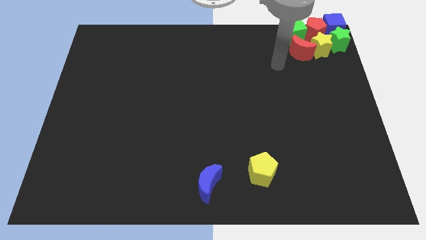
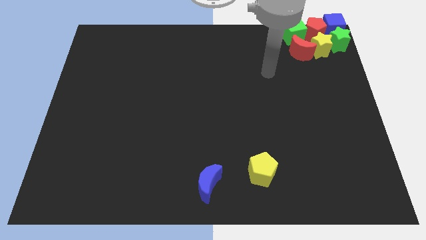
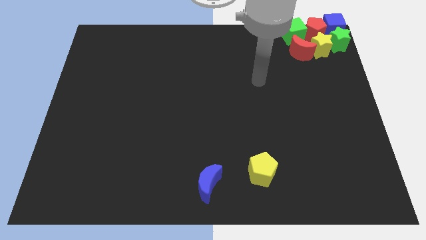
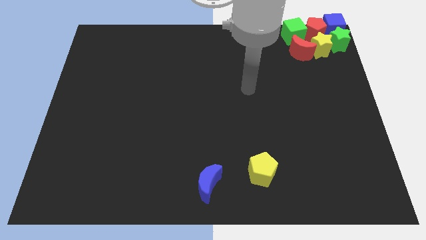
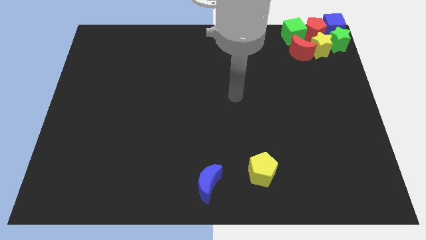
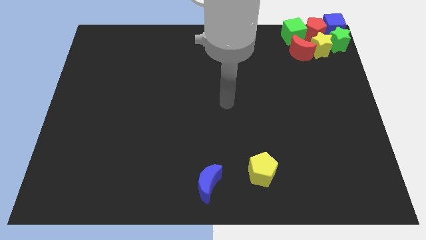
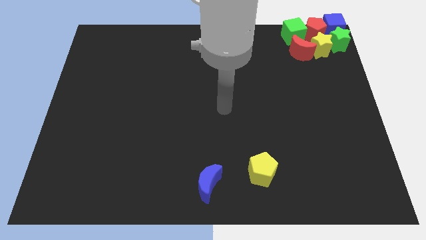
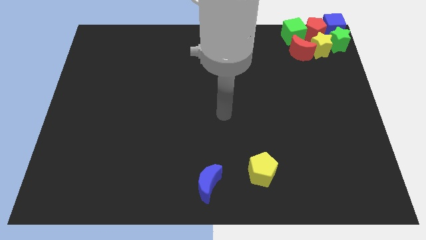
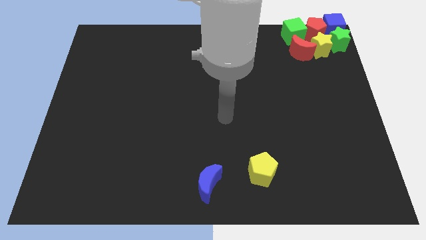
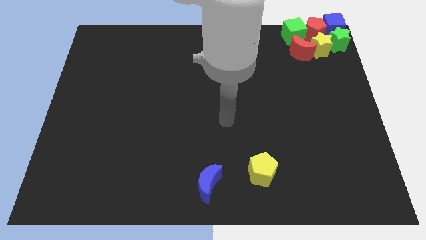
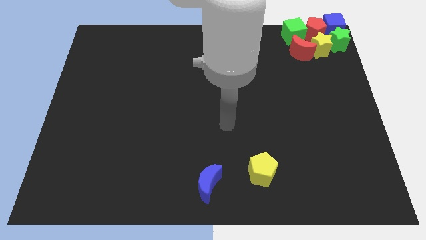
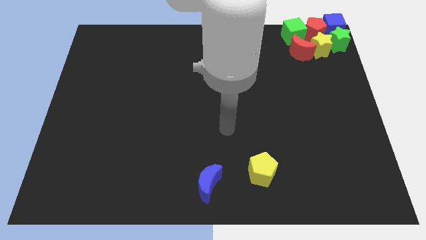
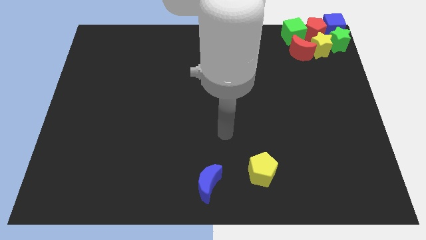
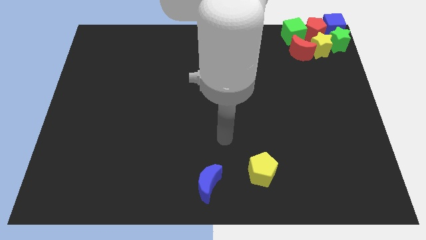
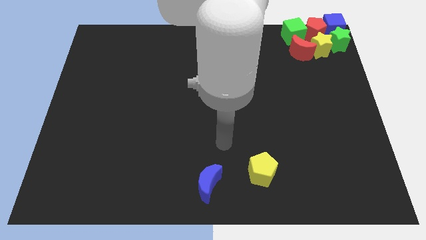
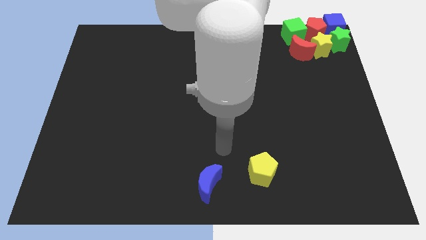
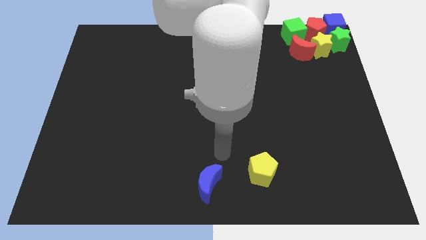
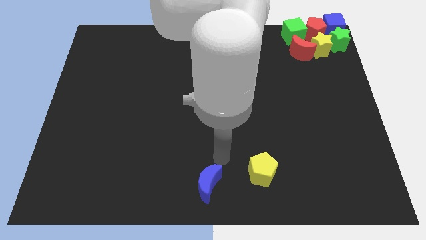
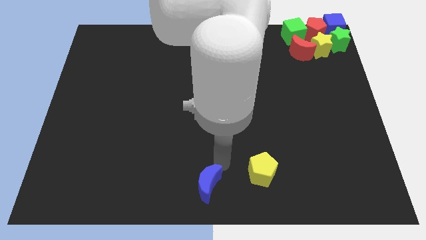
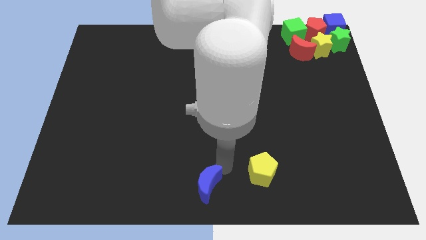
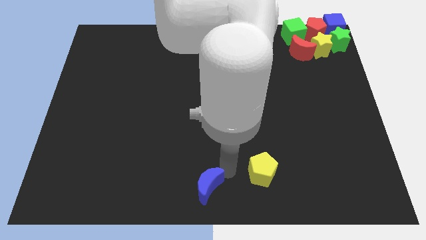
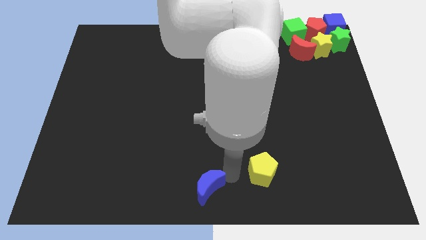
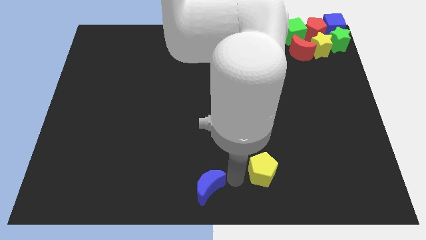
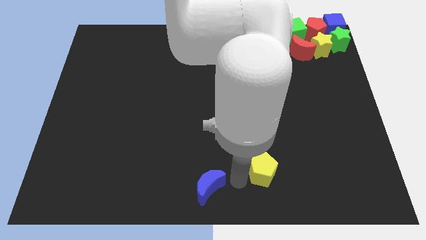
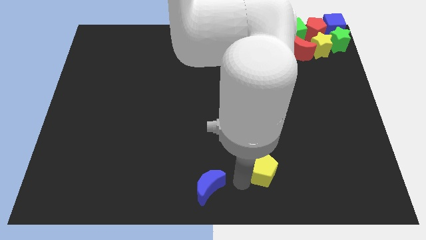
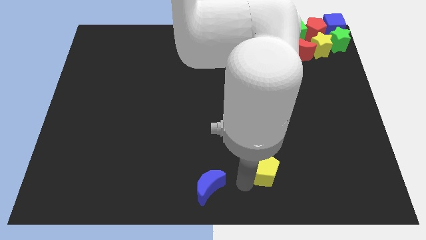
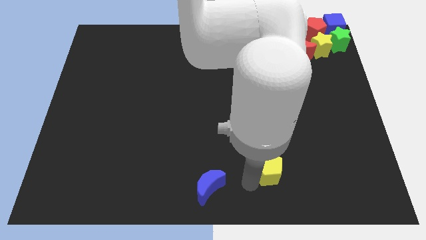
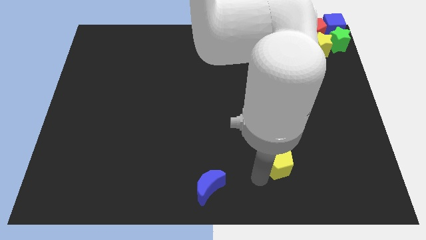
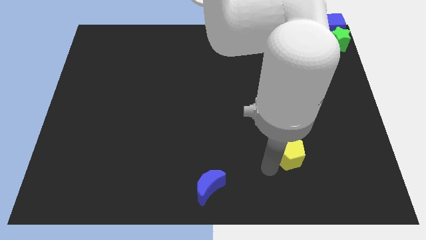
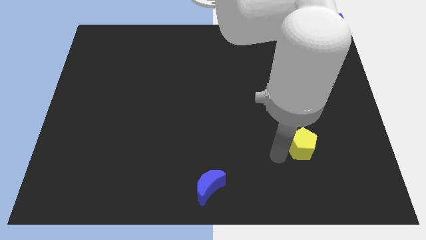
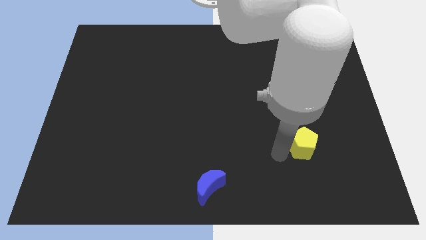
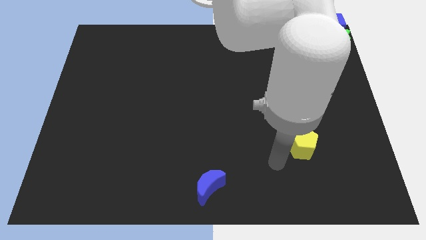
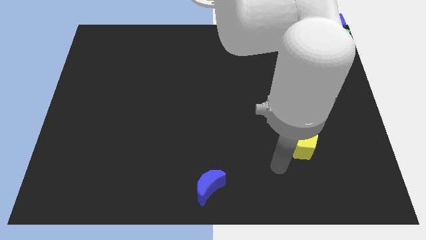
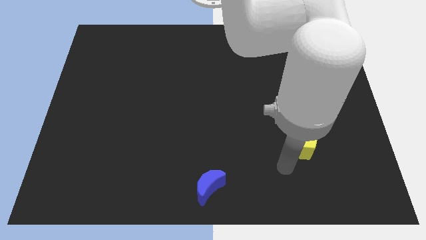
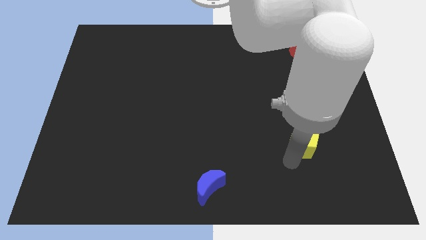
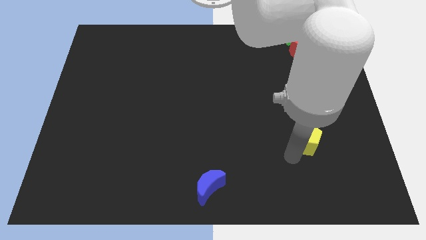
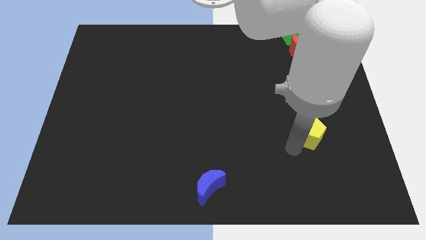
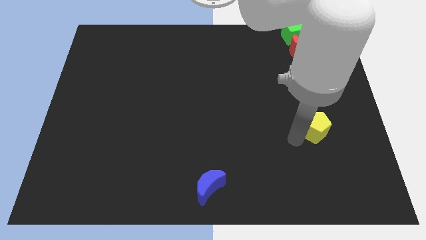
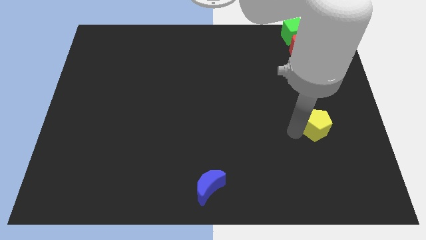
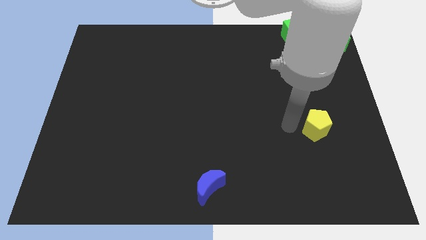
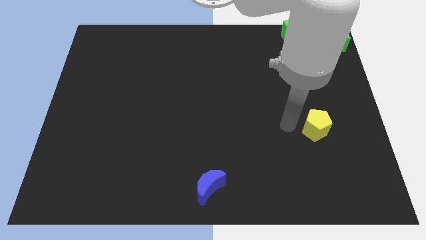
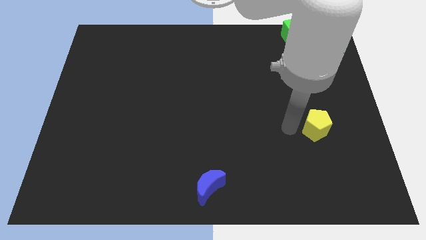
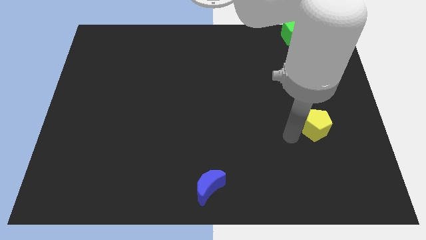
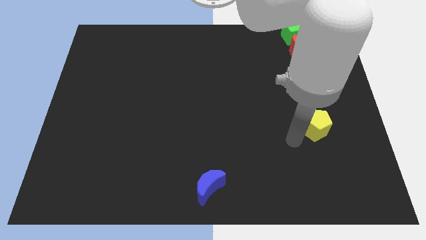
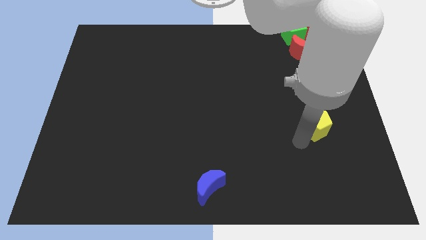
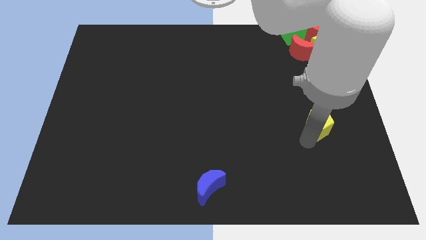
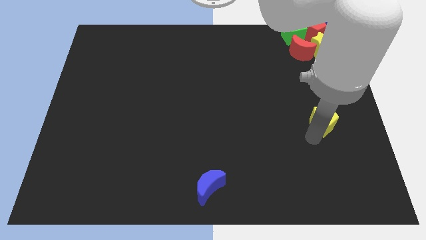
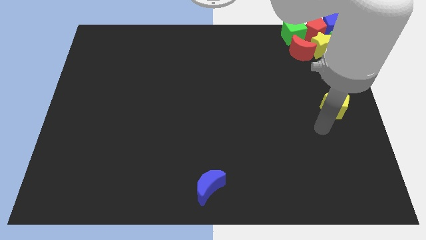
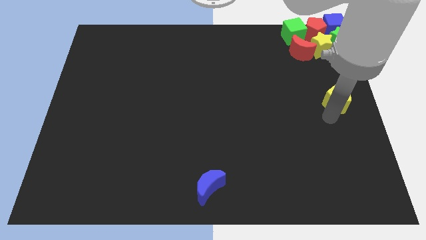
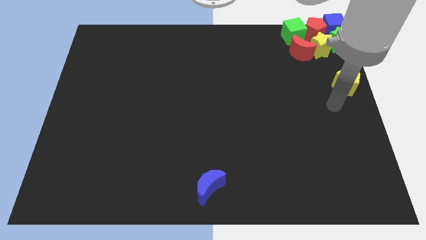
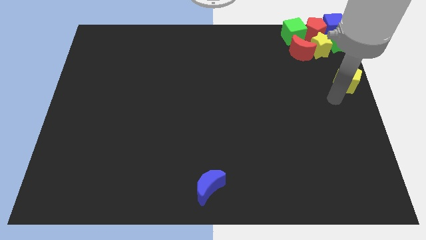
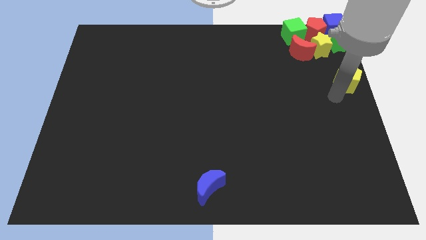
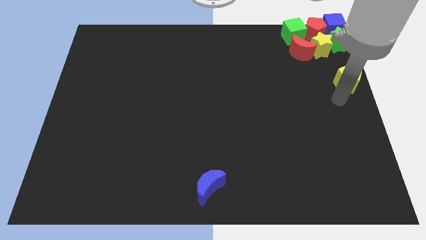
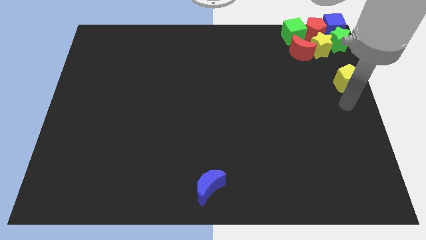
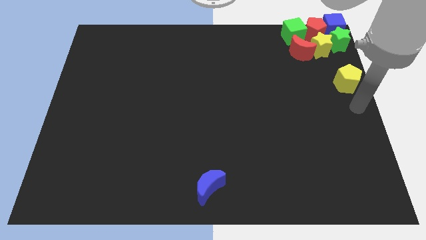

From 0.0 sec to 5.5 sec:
put the yellow pentagon vertically below the green star

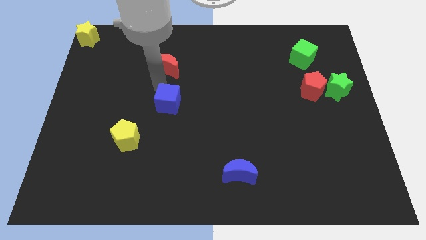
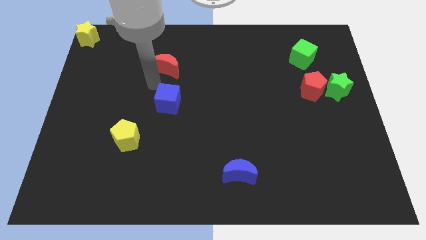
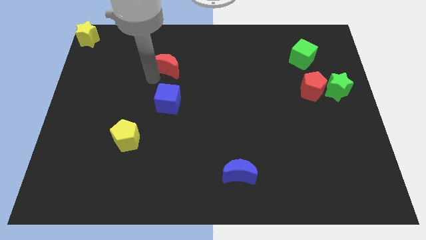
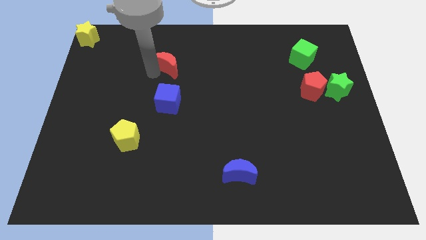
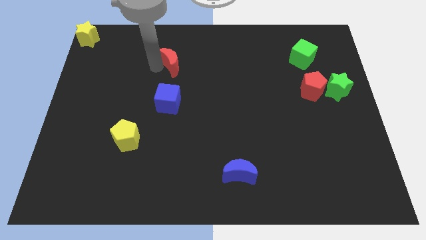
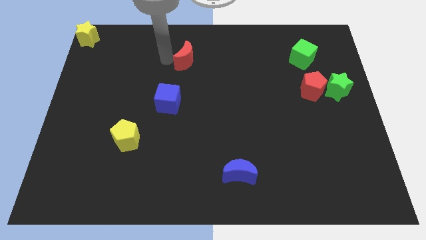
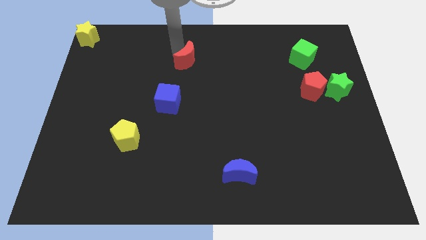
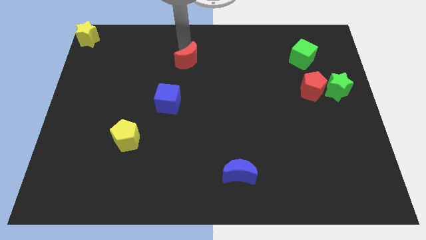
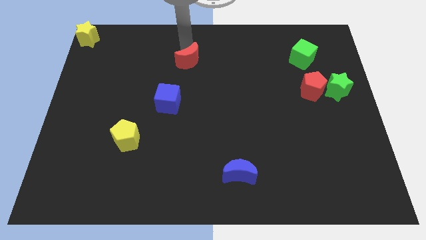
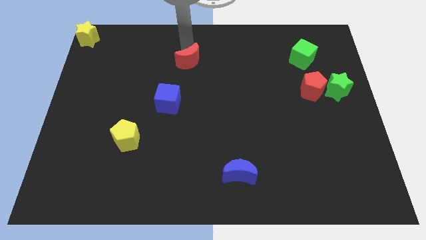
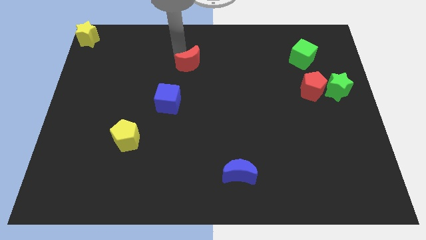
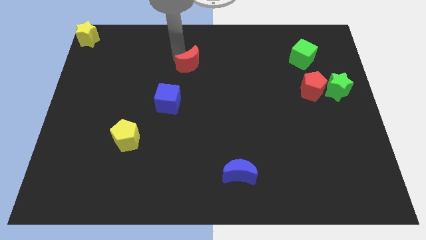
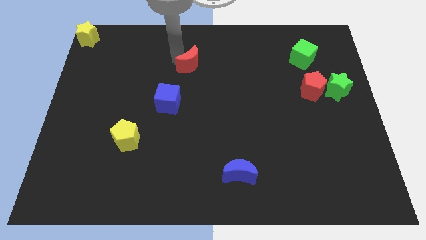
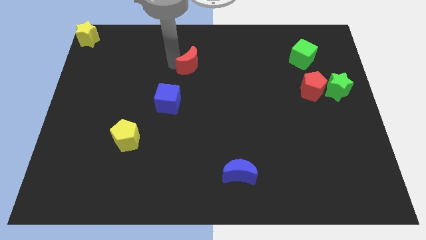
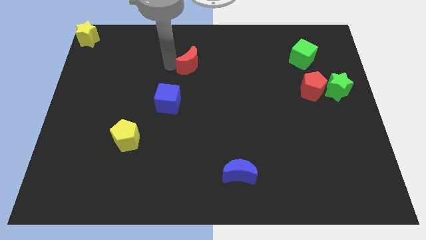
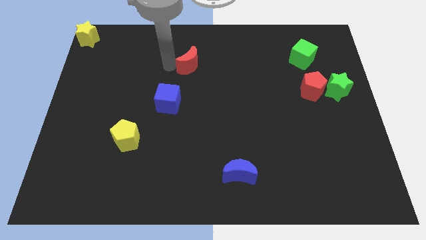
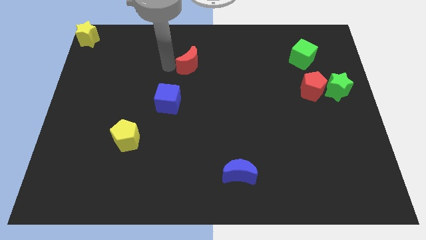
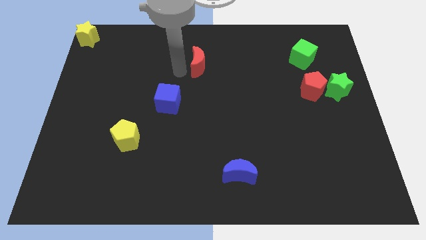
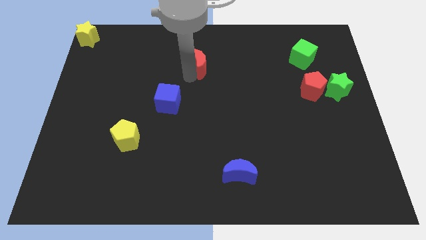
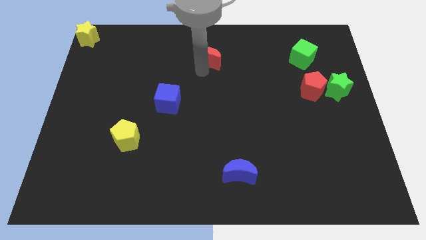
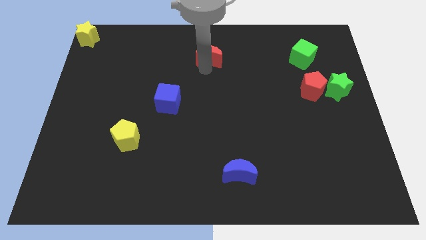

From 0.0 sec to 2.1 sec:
push the red moon towards the top side of the board

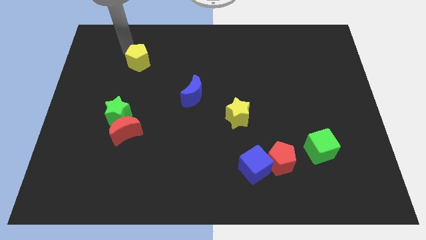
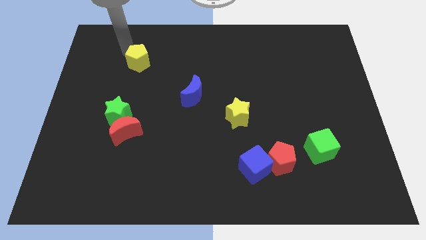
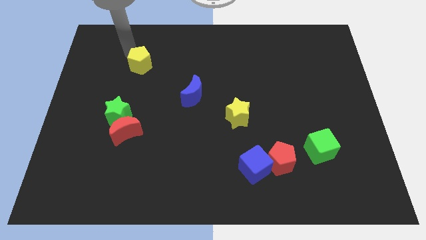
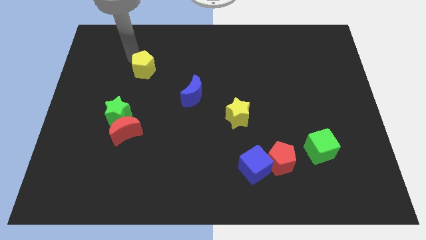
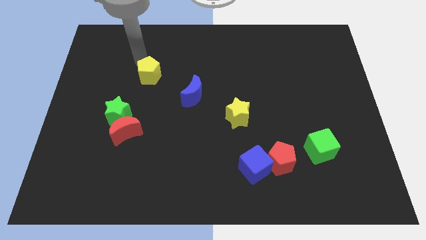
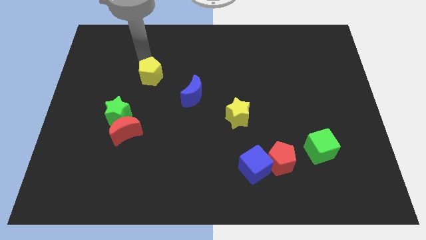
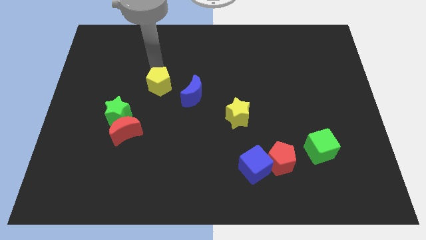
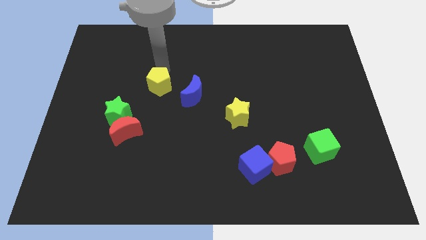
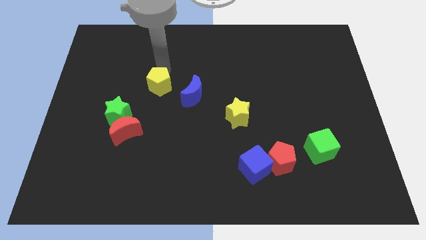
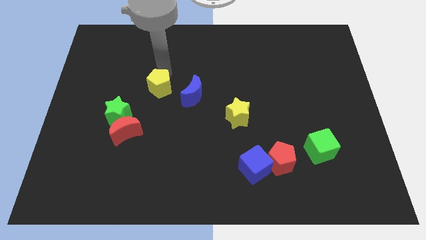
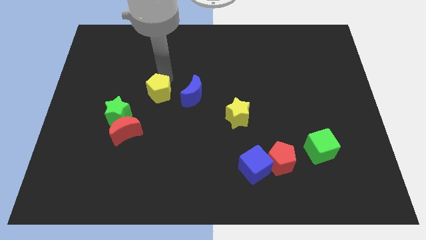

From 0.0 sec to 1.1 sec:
place yellow pentagon to the left of blue moon

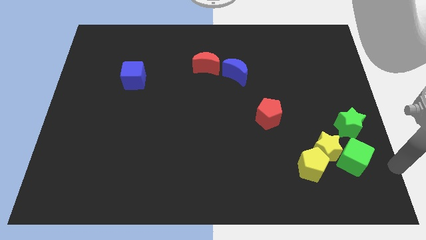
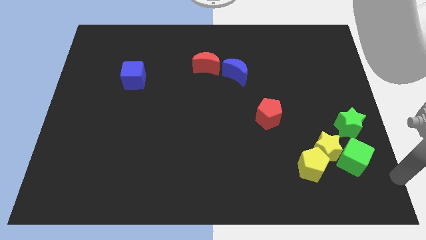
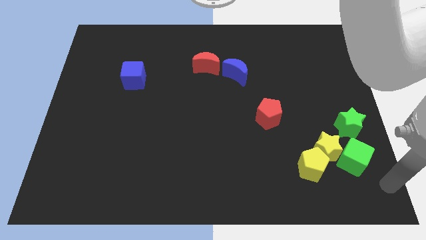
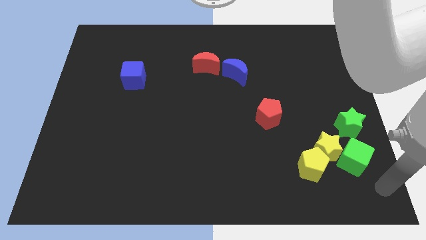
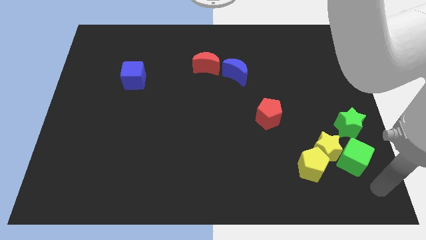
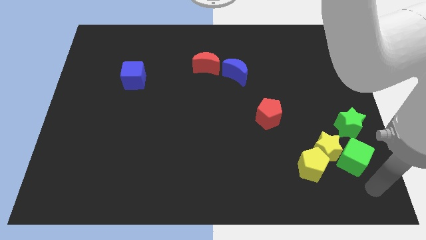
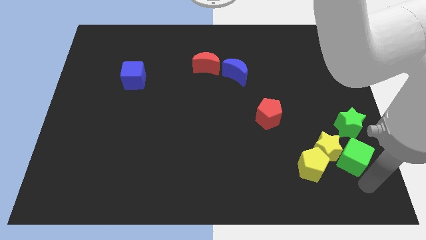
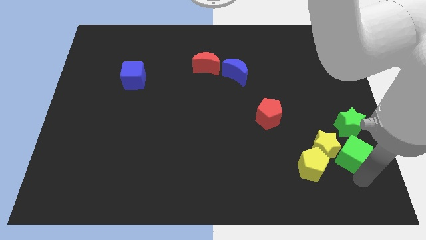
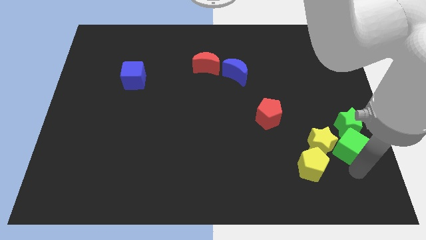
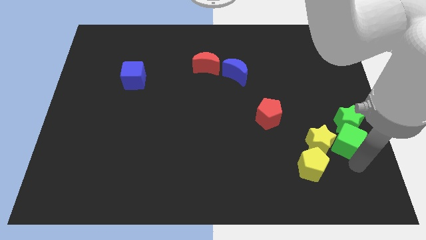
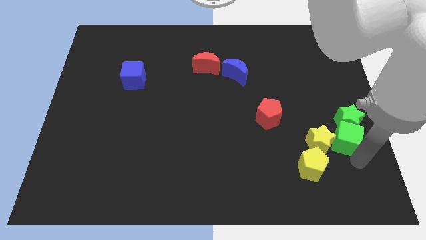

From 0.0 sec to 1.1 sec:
push the green cube into the green star
